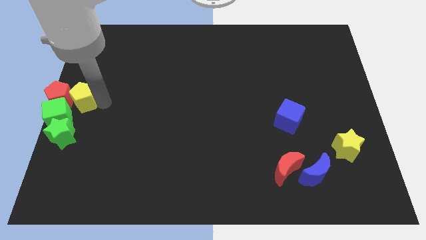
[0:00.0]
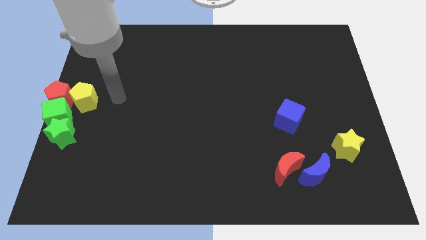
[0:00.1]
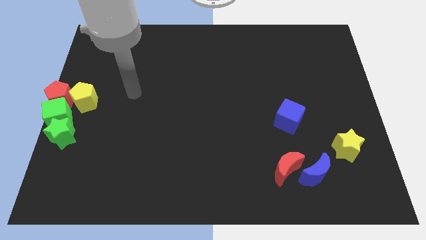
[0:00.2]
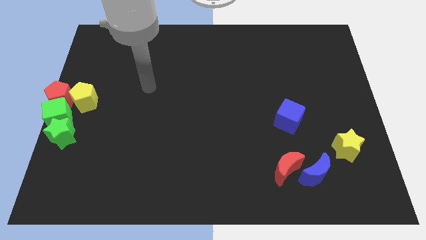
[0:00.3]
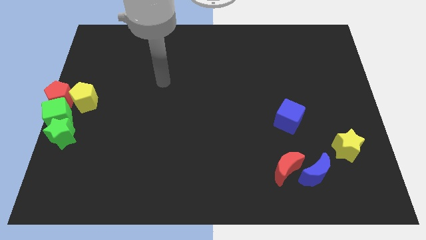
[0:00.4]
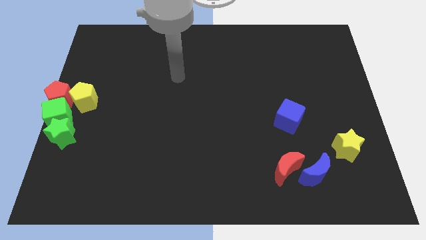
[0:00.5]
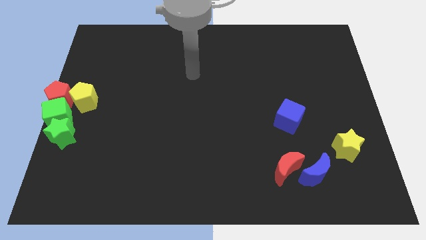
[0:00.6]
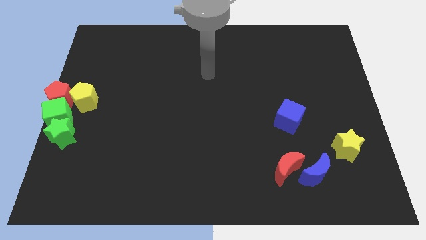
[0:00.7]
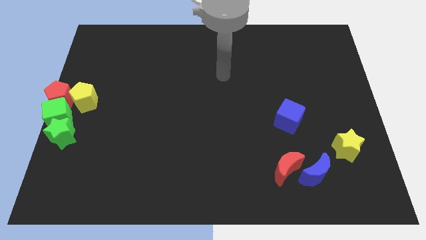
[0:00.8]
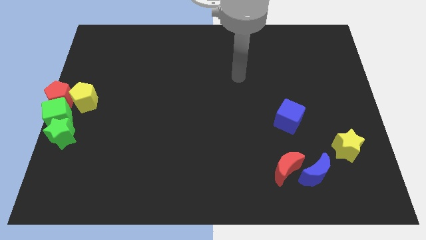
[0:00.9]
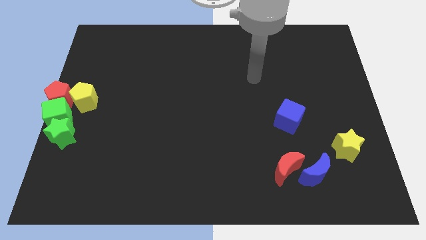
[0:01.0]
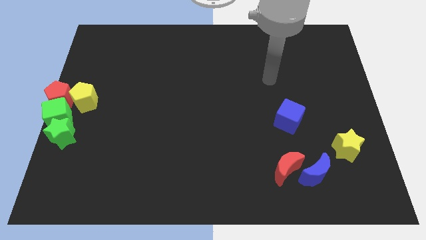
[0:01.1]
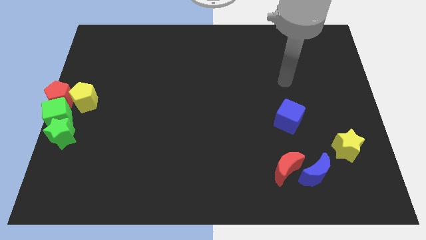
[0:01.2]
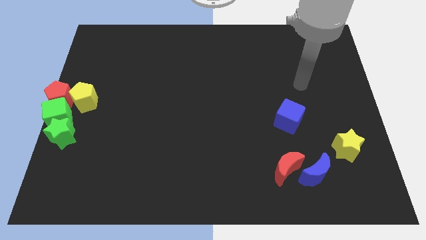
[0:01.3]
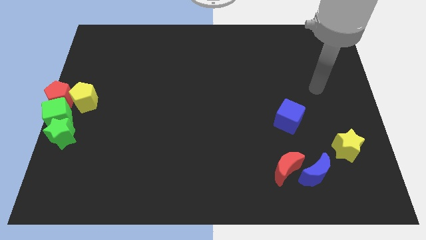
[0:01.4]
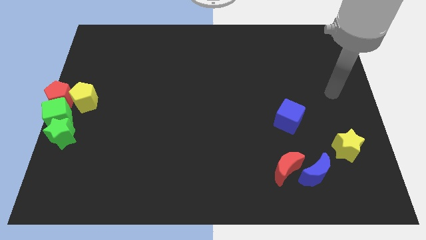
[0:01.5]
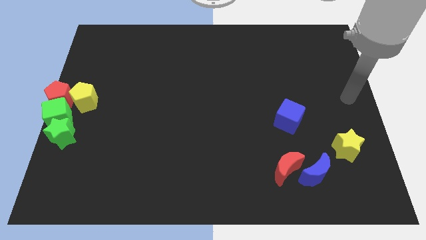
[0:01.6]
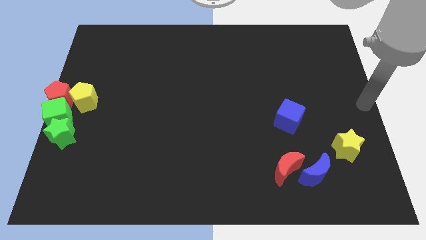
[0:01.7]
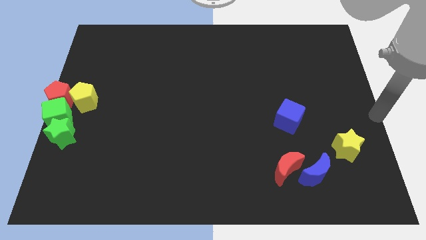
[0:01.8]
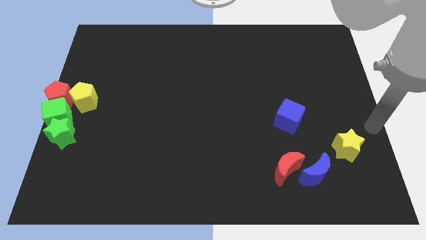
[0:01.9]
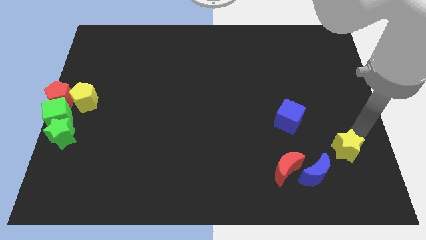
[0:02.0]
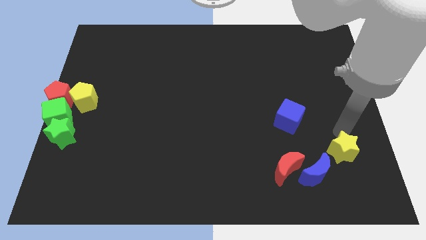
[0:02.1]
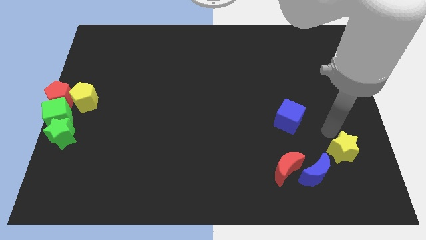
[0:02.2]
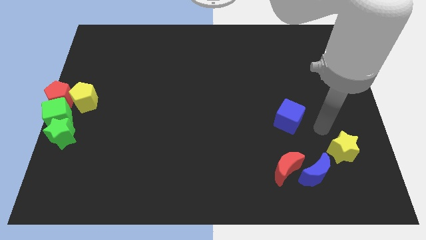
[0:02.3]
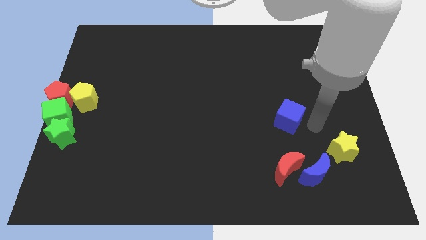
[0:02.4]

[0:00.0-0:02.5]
move your arm to the right of blue cube

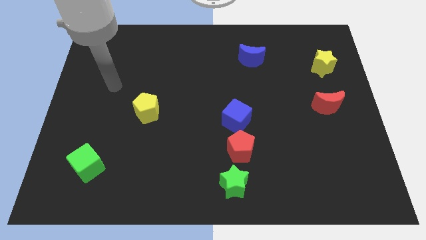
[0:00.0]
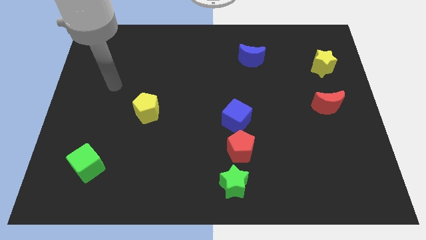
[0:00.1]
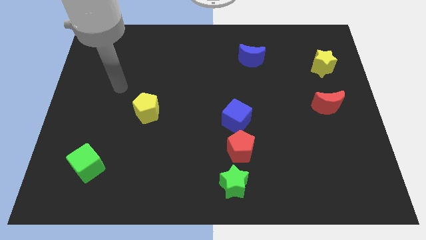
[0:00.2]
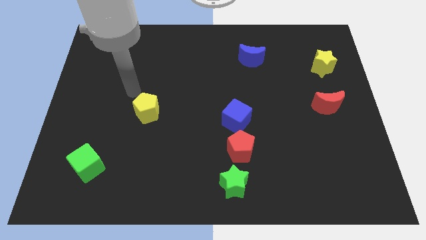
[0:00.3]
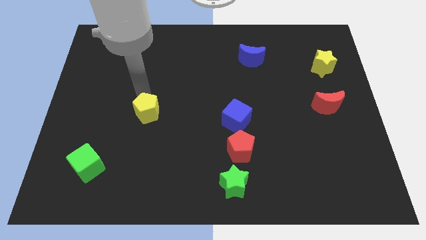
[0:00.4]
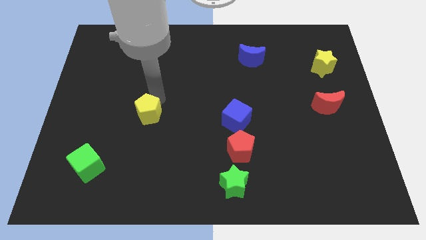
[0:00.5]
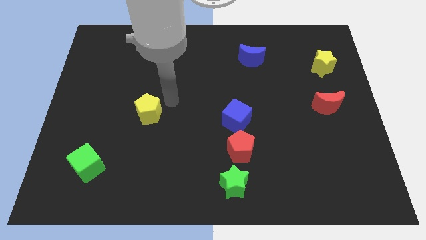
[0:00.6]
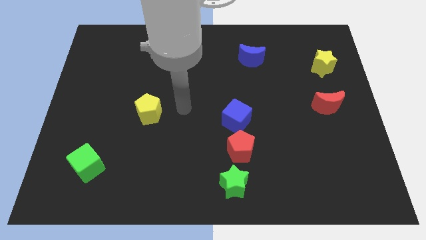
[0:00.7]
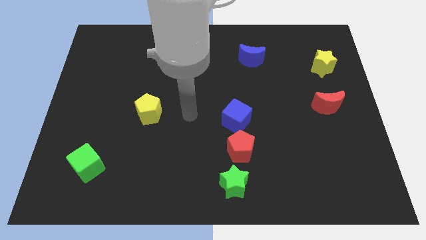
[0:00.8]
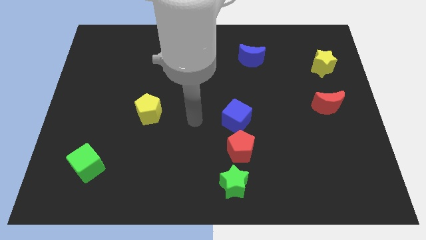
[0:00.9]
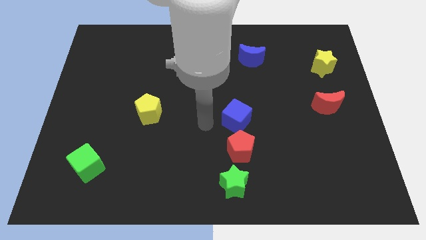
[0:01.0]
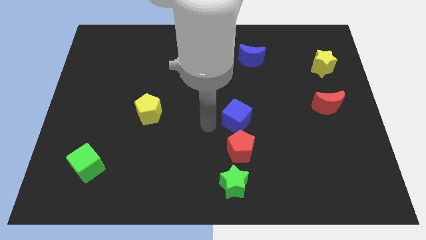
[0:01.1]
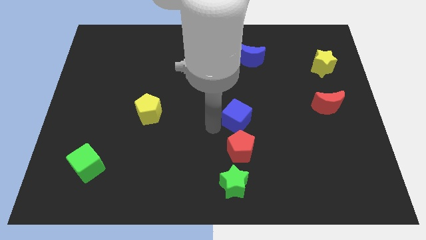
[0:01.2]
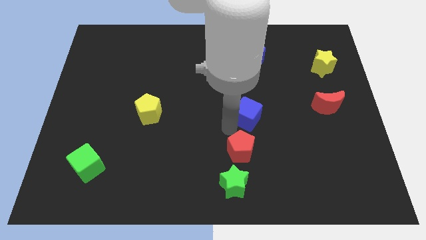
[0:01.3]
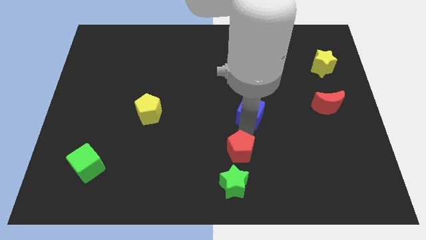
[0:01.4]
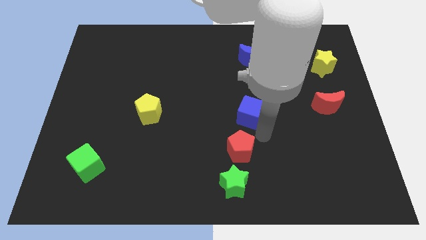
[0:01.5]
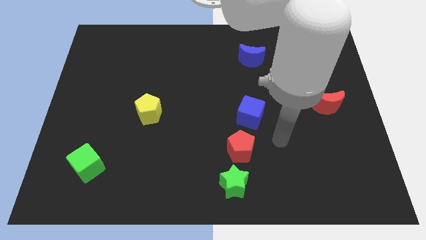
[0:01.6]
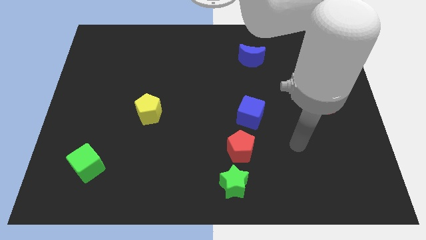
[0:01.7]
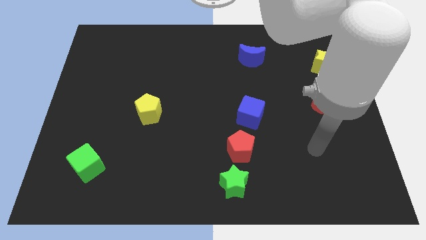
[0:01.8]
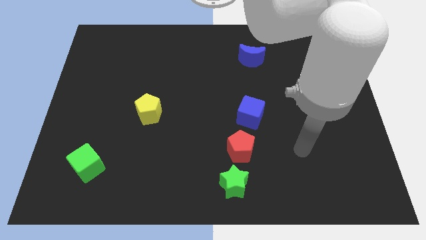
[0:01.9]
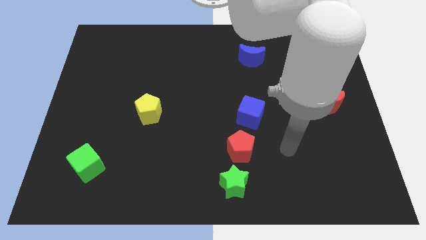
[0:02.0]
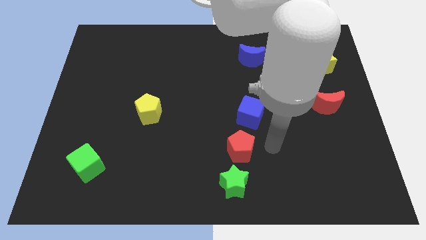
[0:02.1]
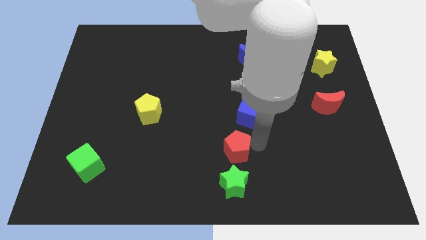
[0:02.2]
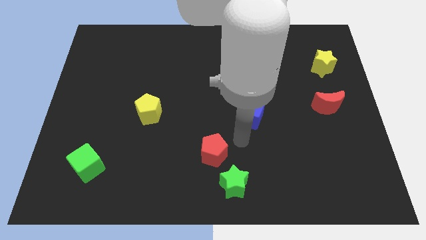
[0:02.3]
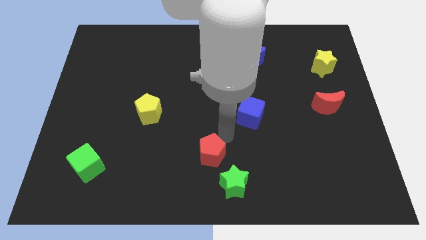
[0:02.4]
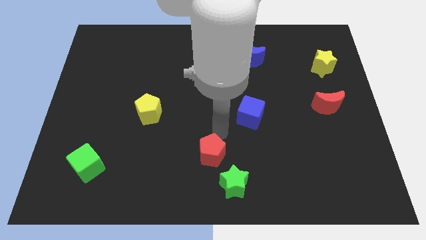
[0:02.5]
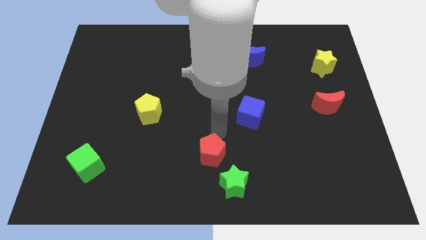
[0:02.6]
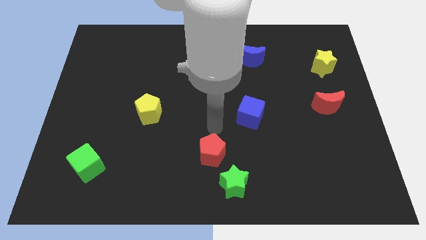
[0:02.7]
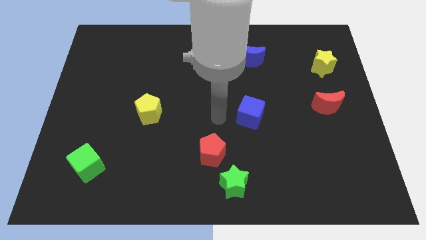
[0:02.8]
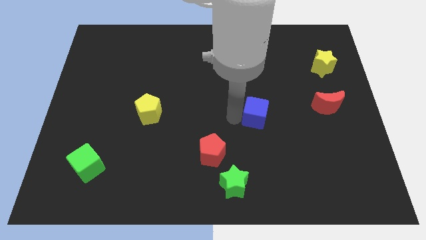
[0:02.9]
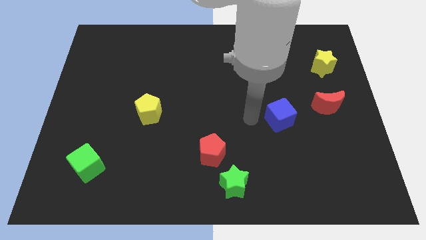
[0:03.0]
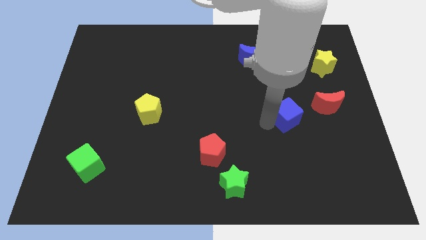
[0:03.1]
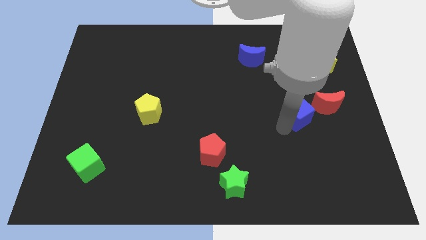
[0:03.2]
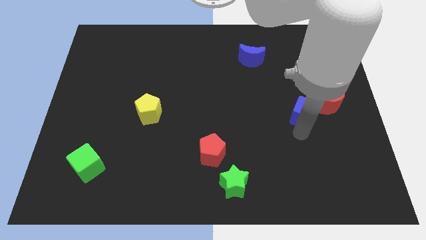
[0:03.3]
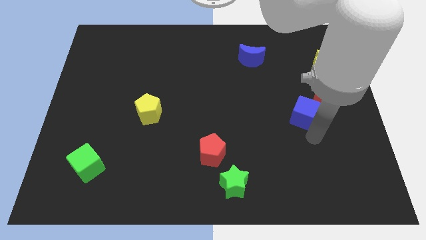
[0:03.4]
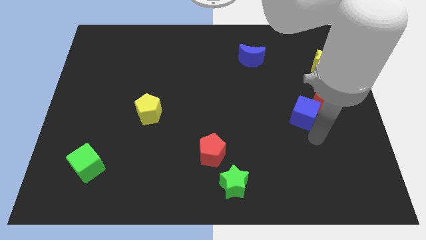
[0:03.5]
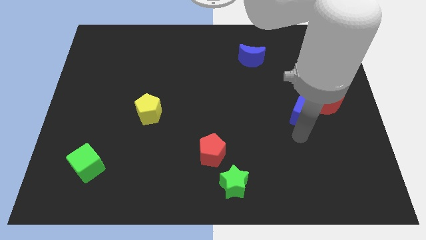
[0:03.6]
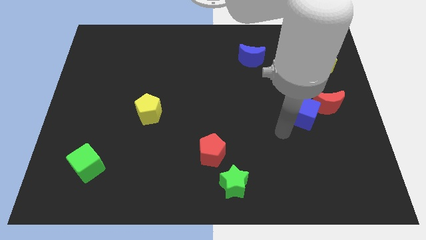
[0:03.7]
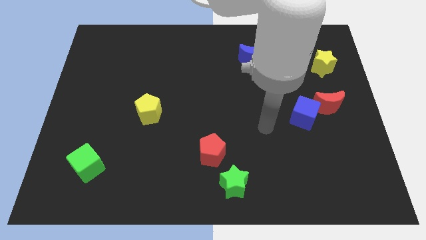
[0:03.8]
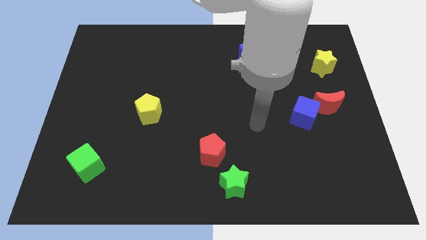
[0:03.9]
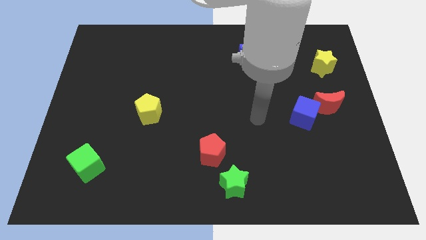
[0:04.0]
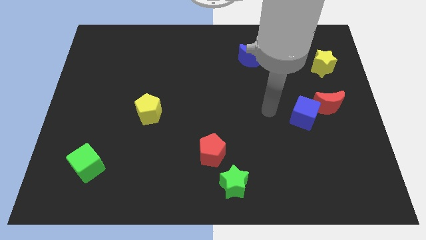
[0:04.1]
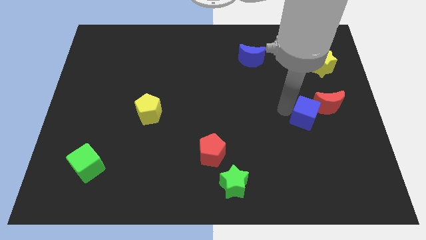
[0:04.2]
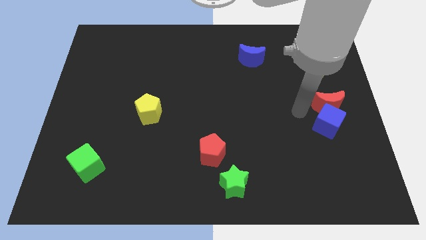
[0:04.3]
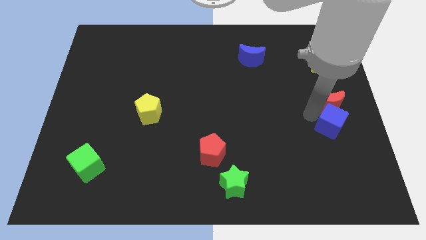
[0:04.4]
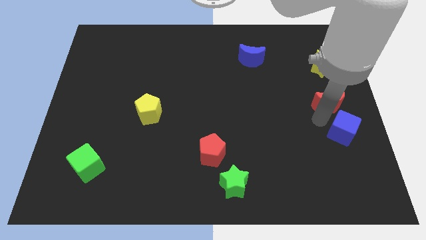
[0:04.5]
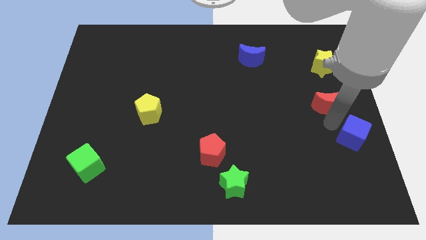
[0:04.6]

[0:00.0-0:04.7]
push the red pentagon and blue cube away from the vertical line

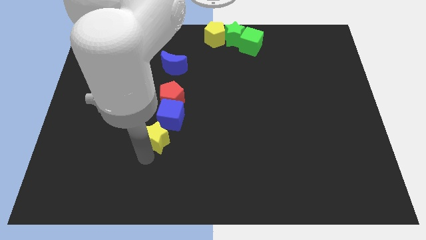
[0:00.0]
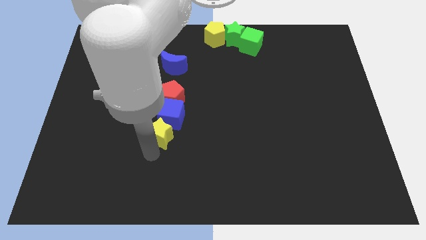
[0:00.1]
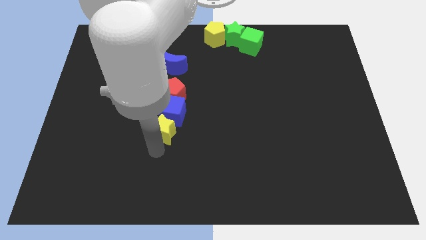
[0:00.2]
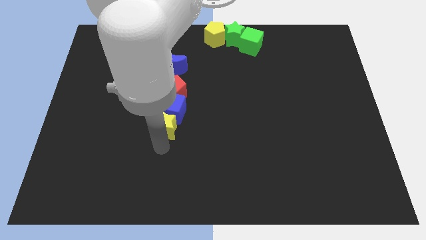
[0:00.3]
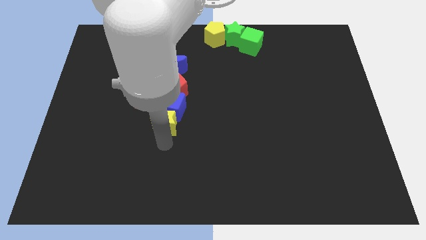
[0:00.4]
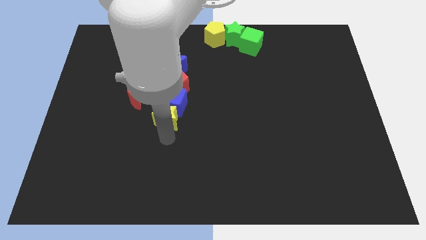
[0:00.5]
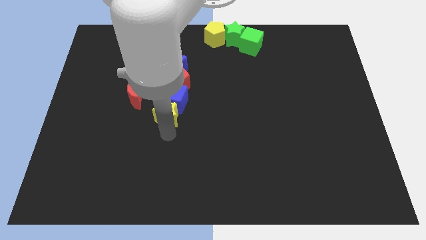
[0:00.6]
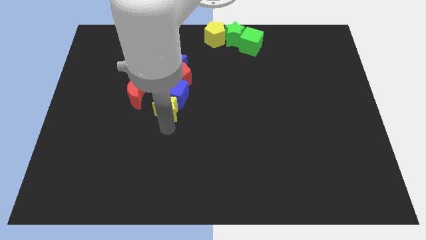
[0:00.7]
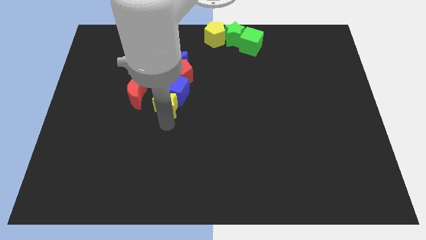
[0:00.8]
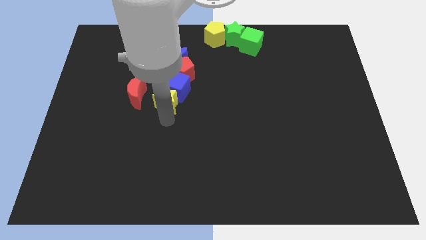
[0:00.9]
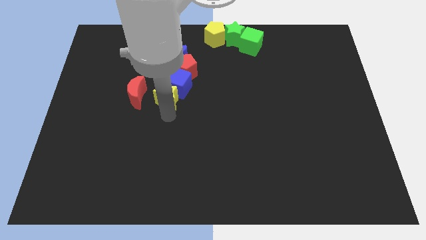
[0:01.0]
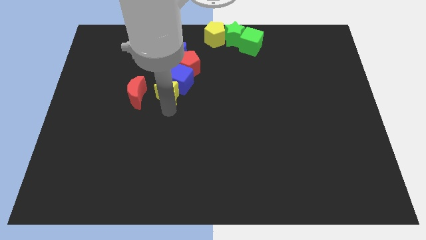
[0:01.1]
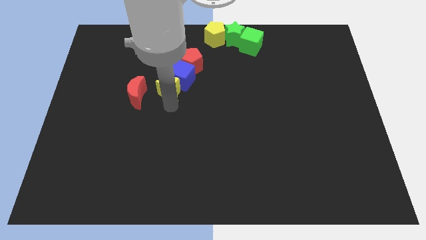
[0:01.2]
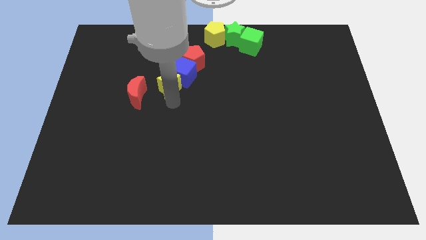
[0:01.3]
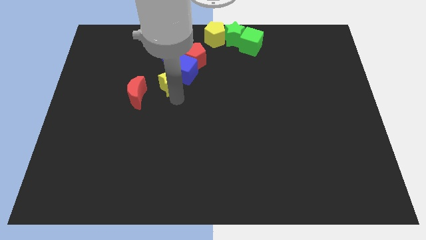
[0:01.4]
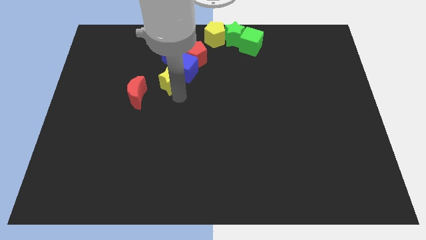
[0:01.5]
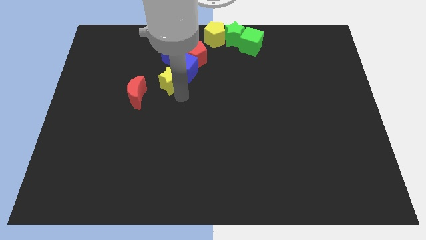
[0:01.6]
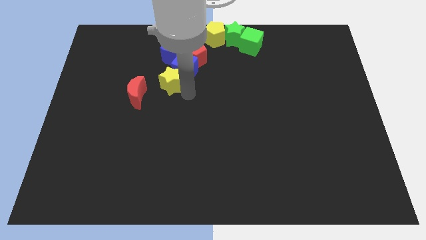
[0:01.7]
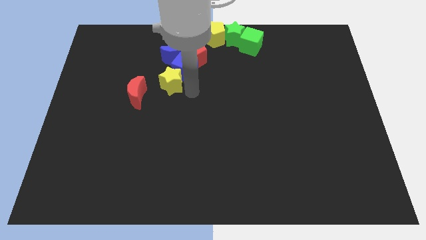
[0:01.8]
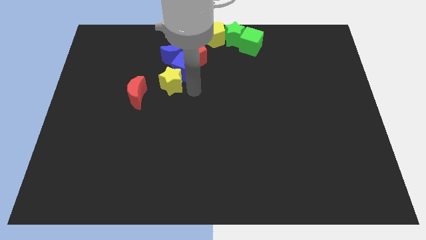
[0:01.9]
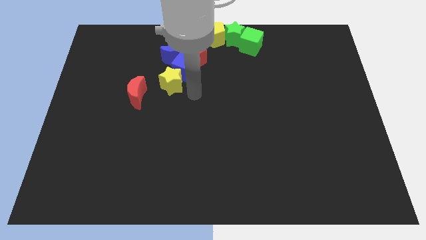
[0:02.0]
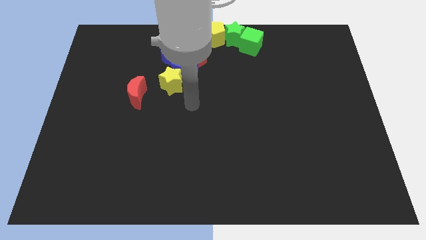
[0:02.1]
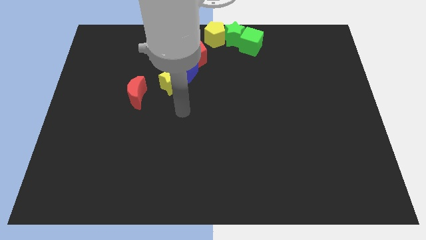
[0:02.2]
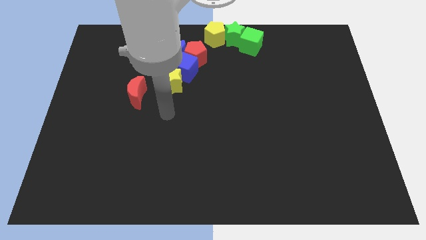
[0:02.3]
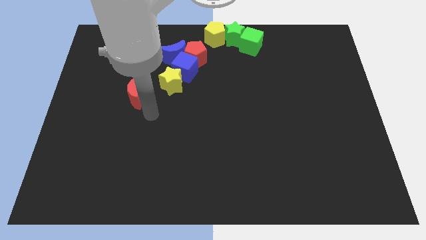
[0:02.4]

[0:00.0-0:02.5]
push the group of blocks towards the top side of the board
